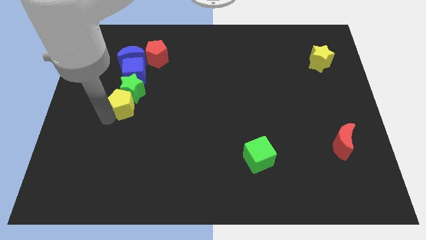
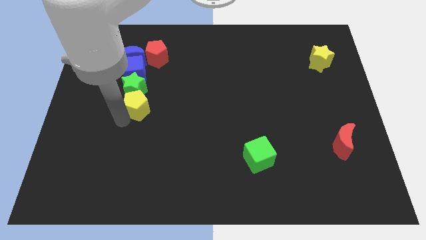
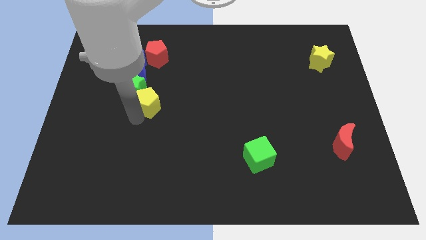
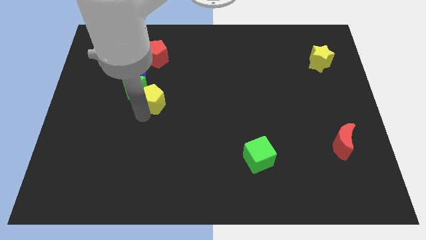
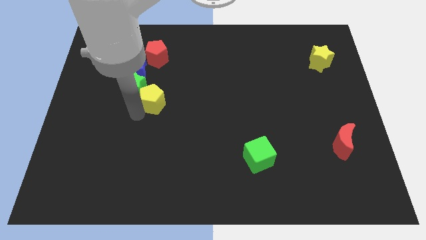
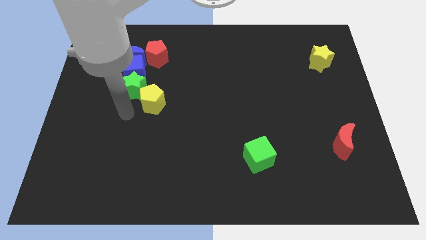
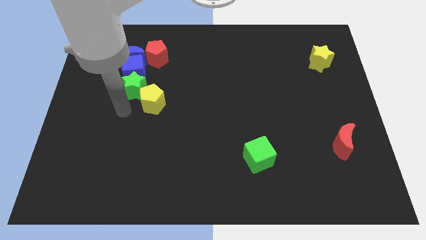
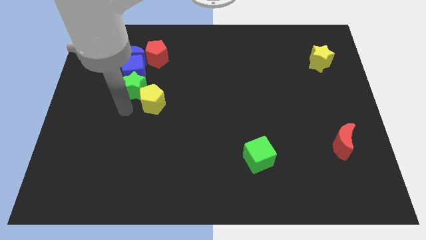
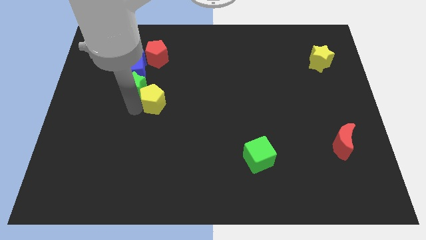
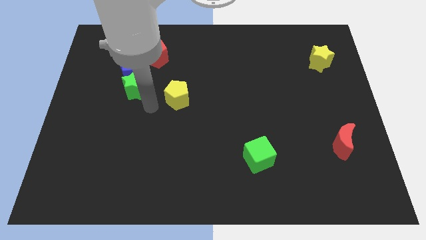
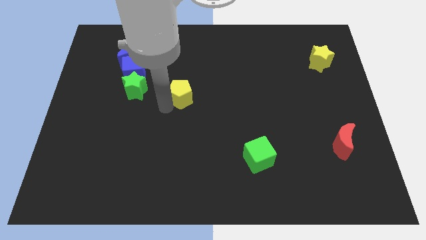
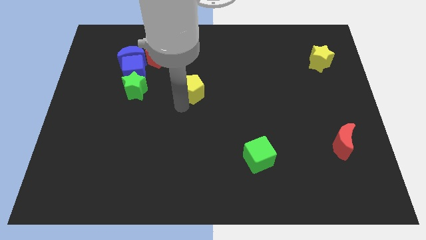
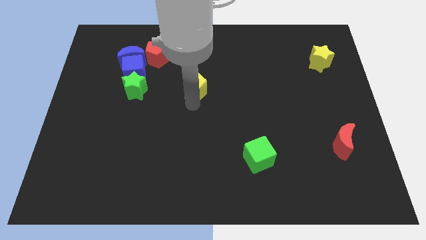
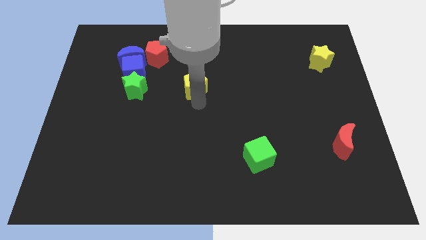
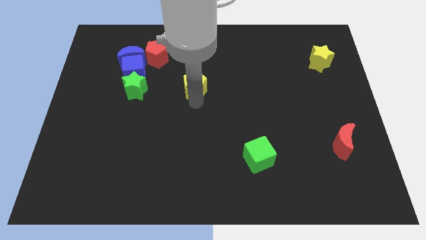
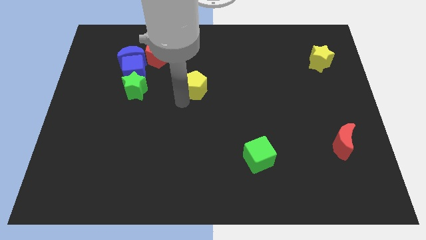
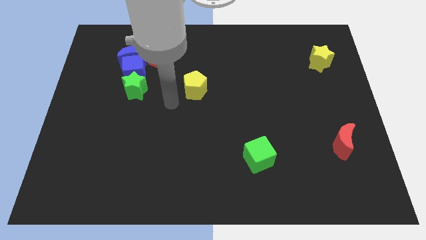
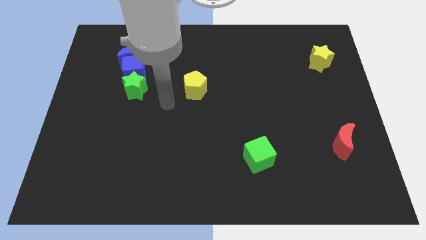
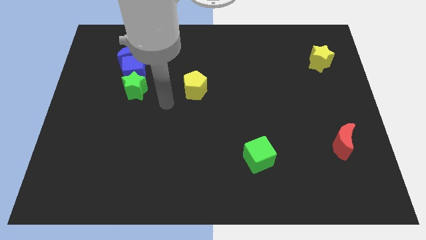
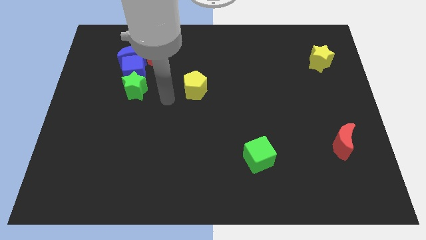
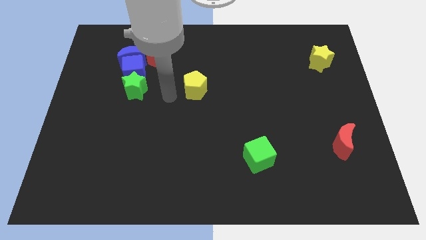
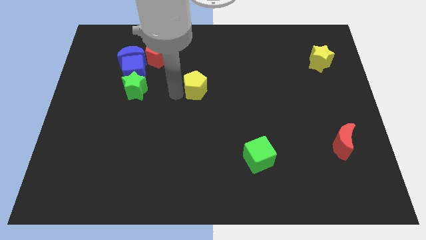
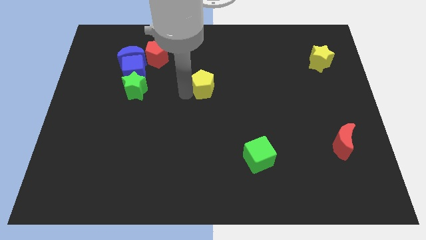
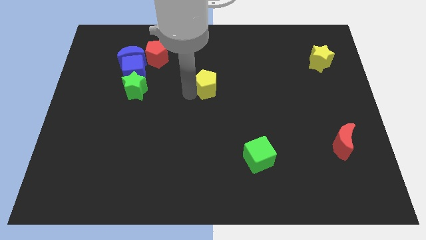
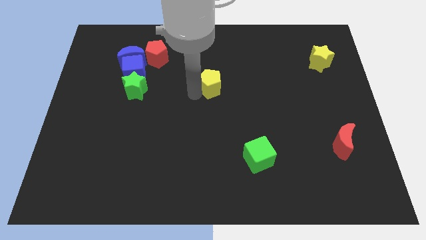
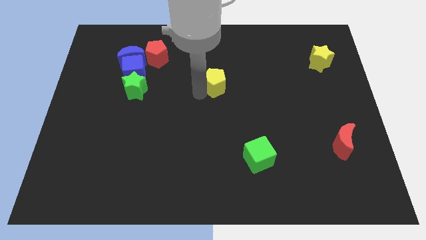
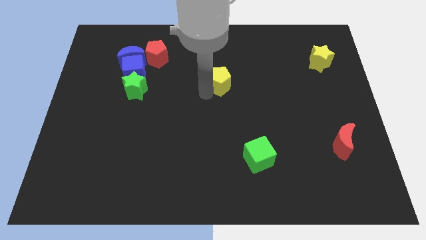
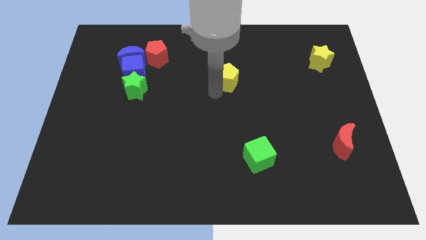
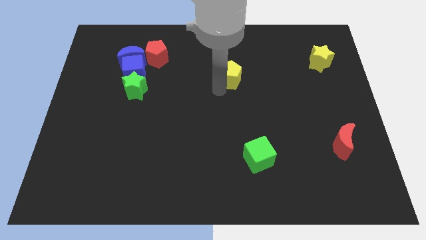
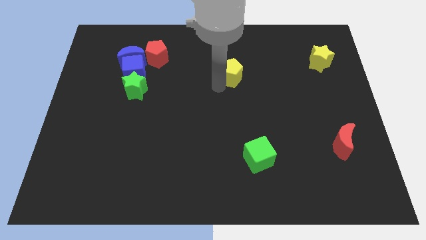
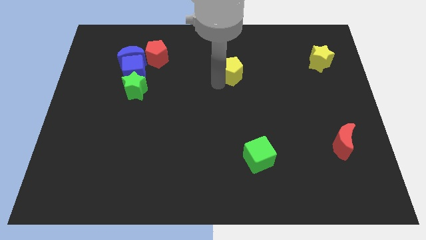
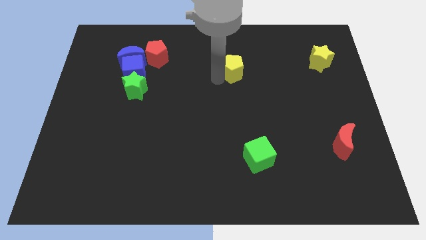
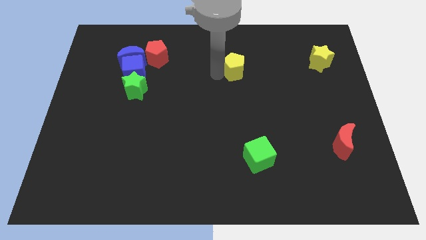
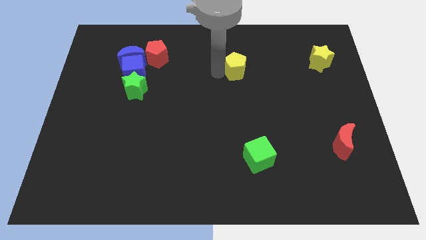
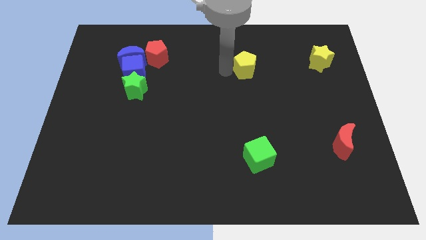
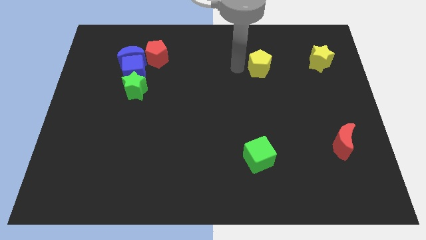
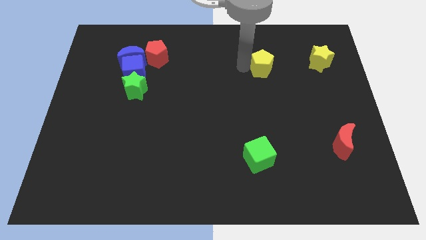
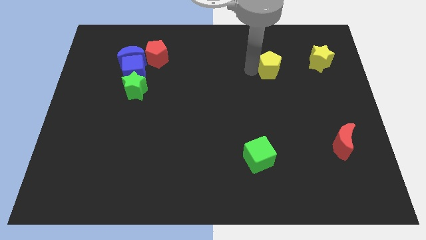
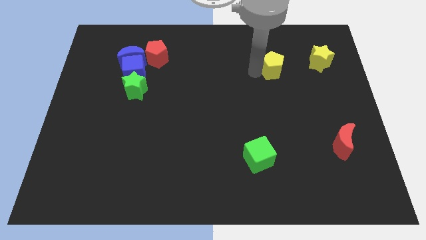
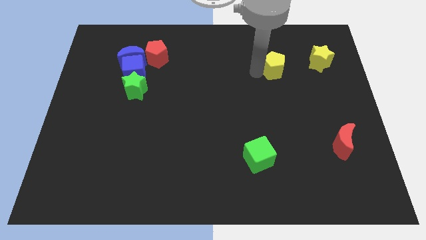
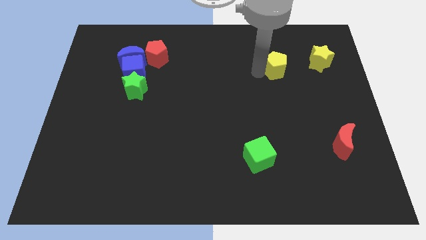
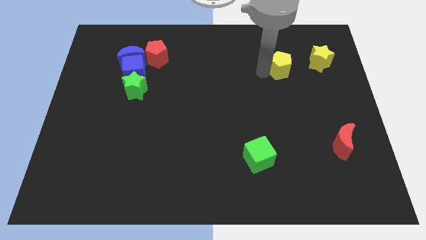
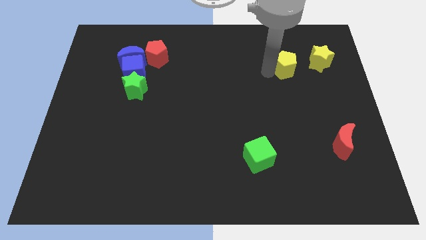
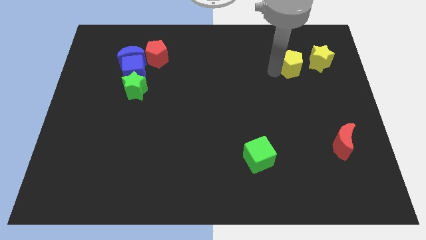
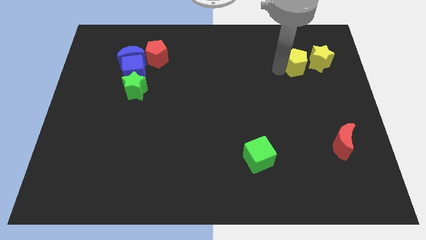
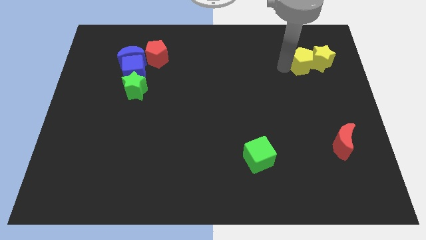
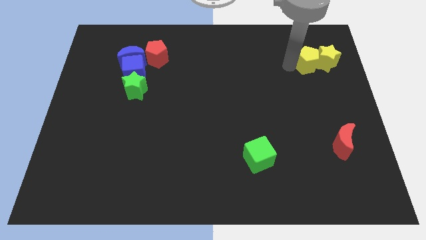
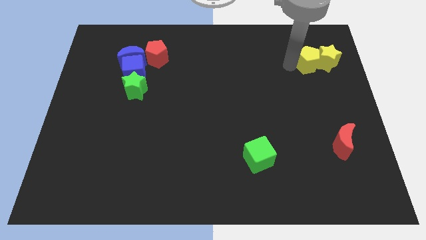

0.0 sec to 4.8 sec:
place the yellow pentagon into the yellow star

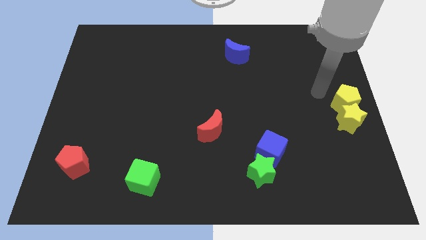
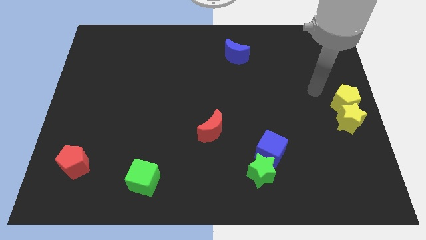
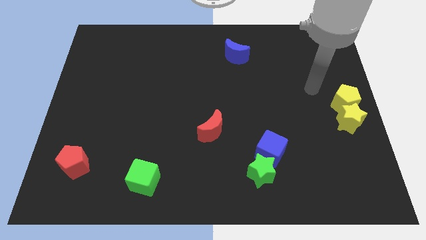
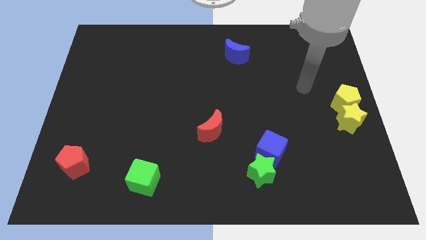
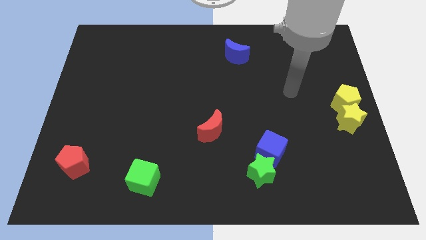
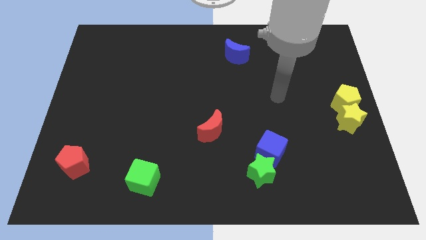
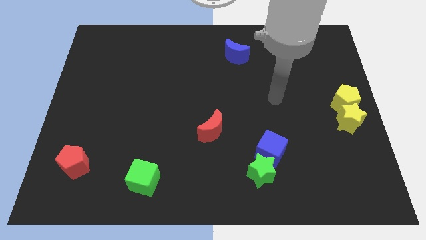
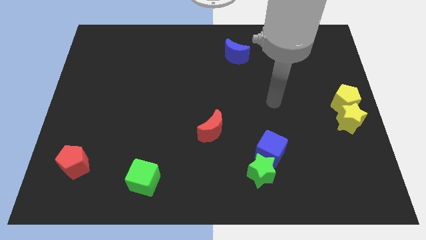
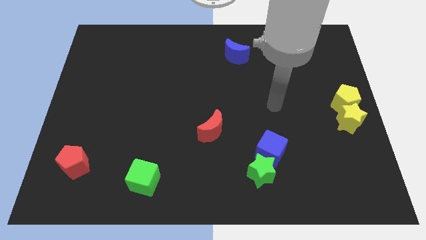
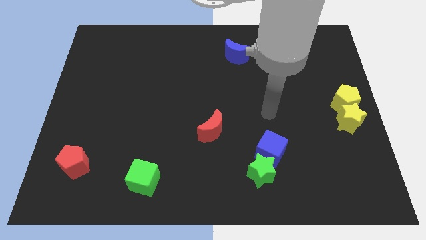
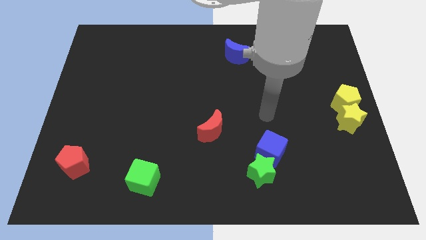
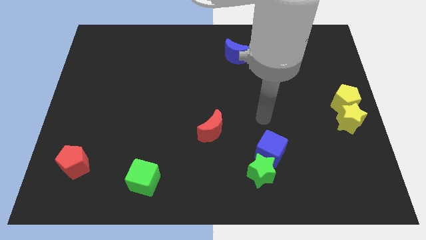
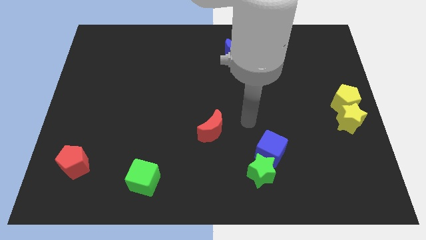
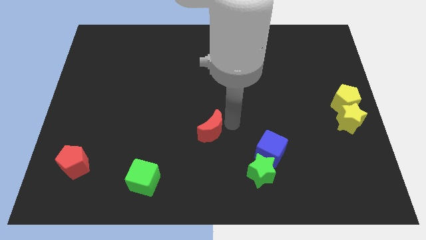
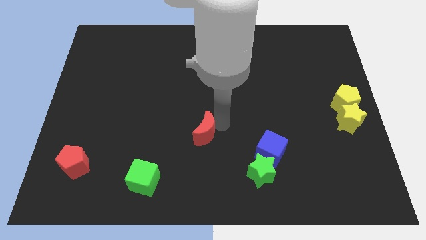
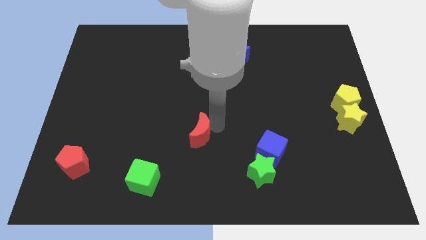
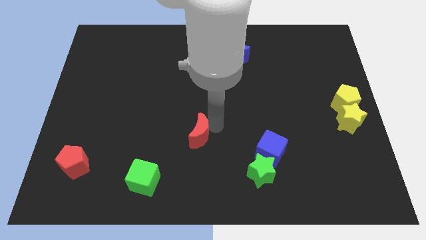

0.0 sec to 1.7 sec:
go to the red crescent

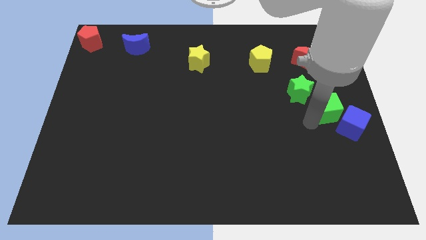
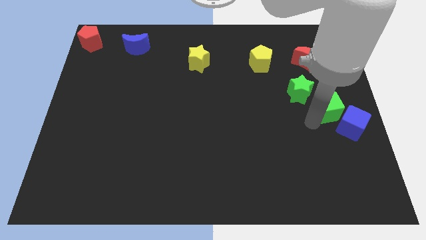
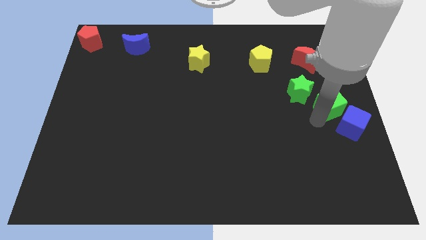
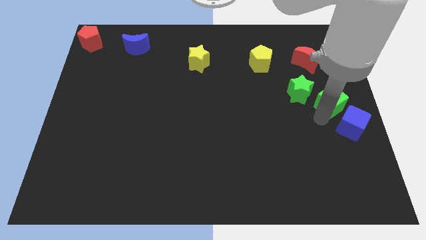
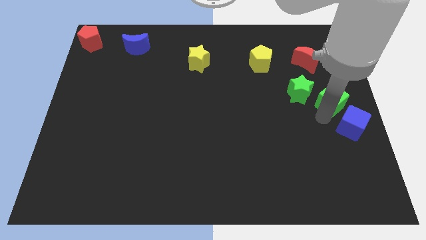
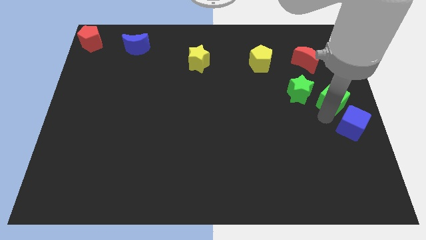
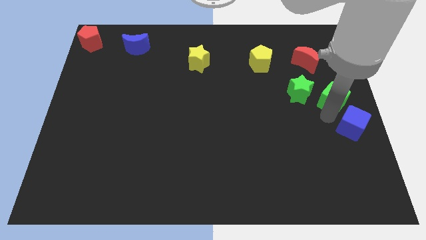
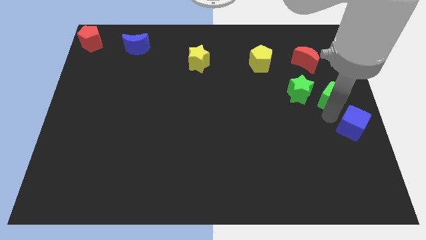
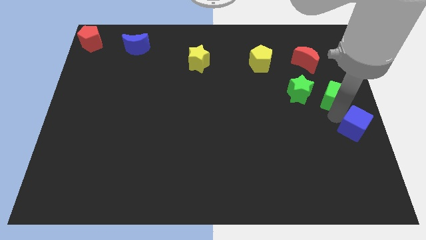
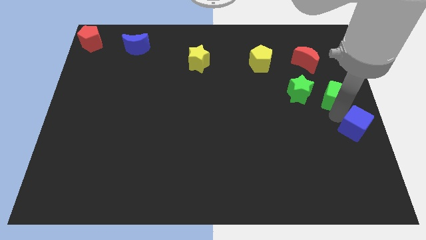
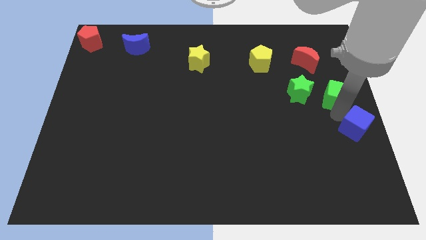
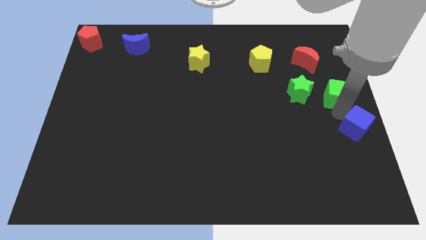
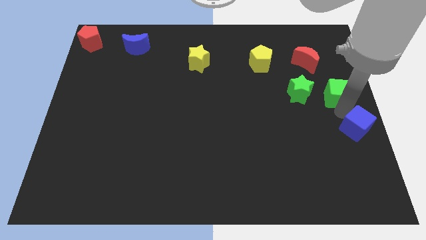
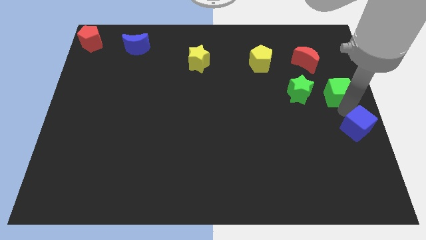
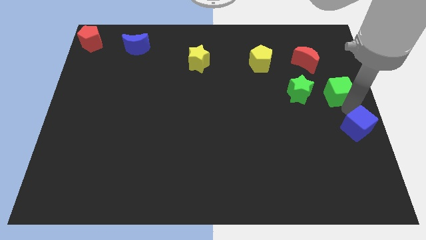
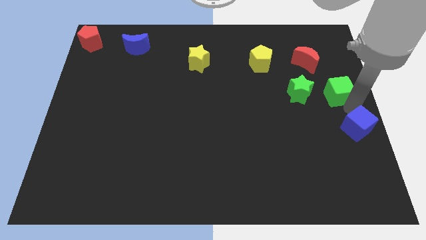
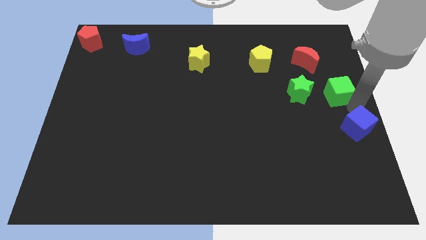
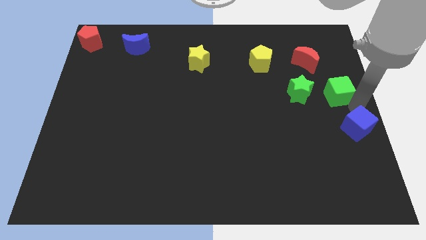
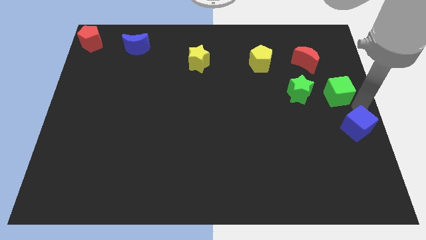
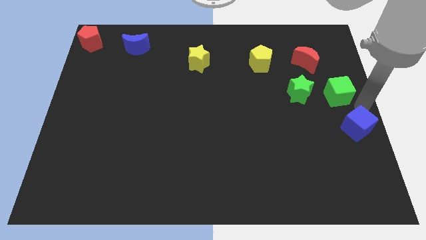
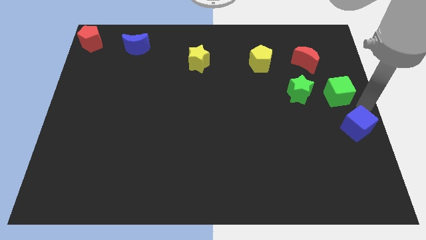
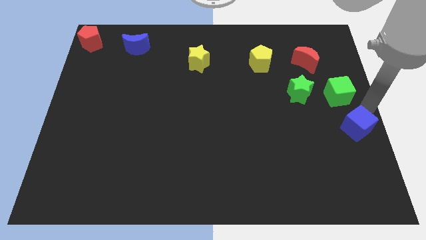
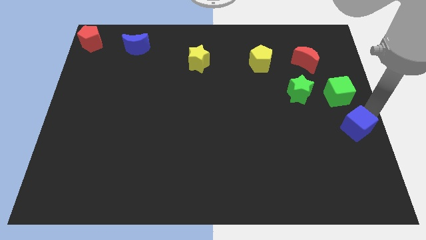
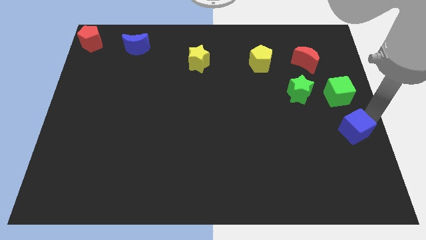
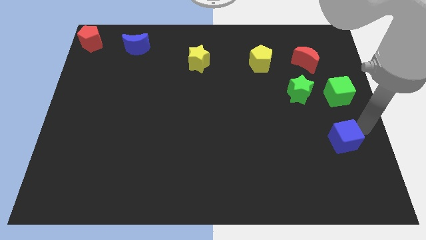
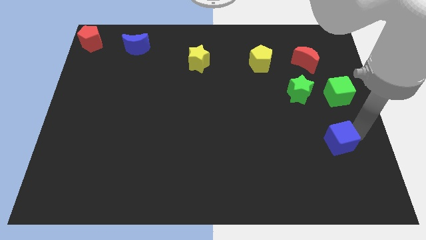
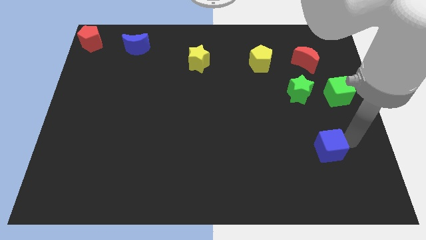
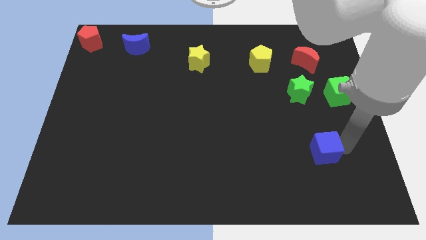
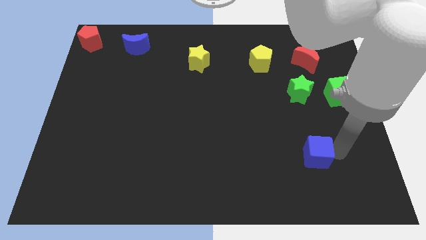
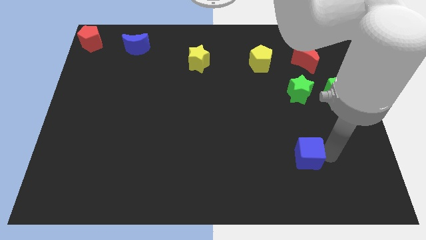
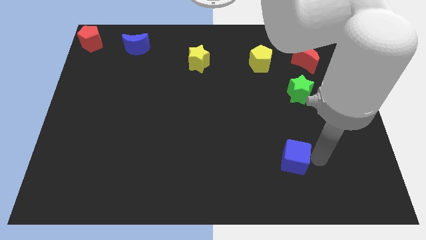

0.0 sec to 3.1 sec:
separate green and blue cubes
